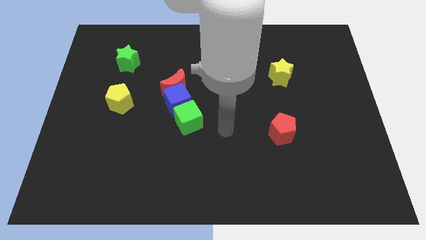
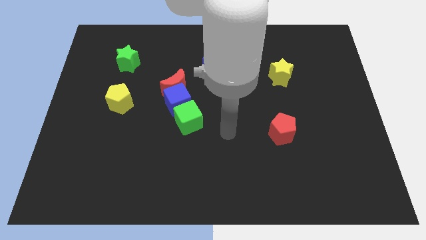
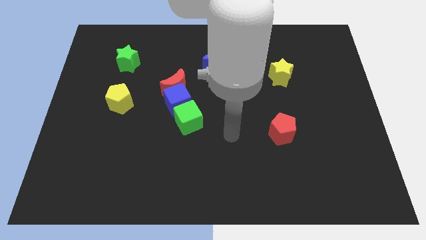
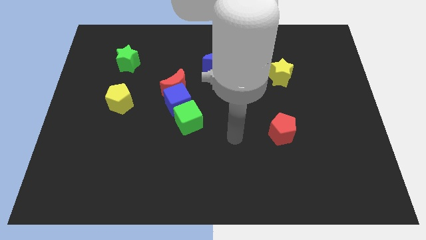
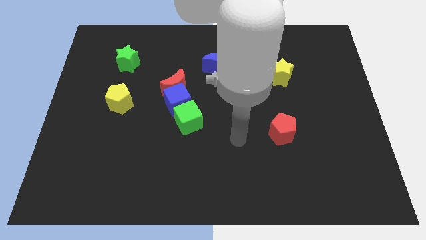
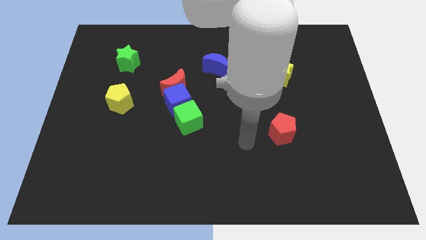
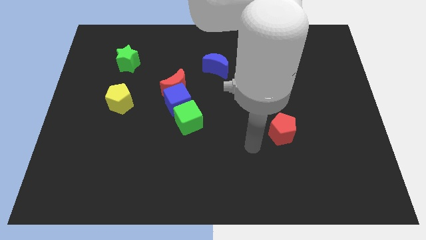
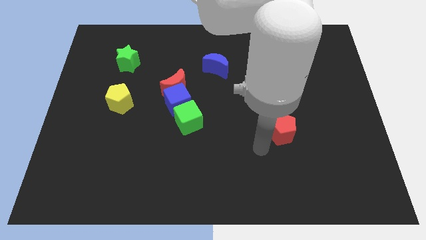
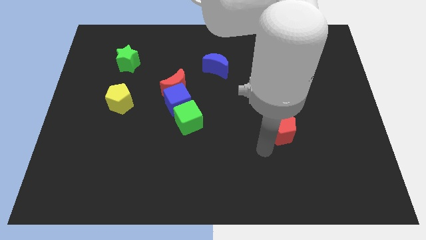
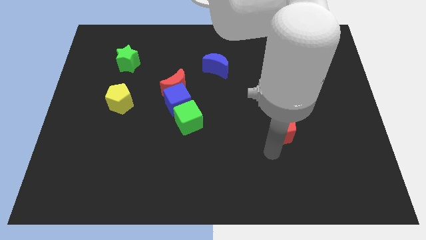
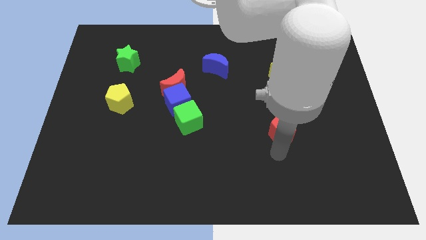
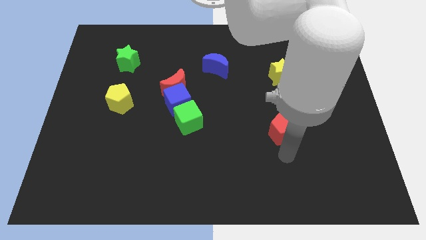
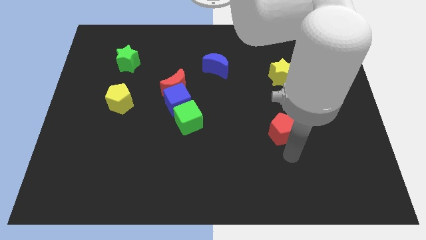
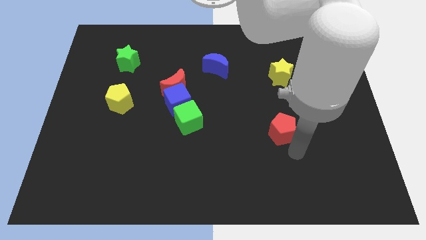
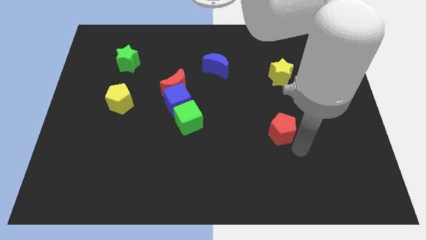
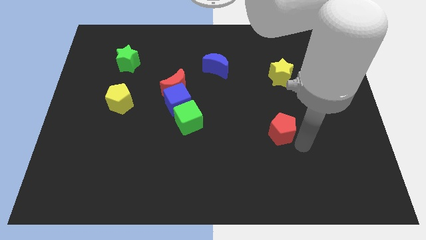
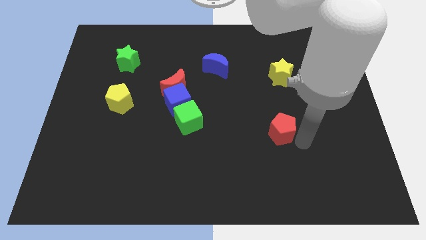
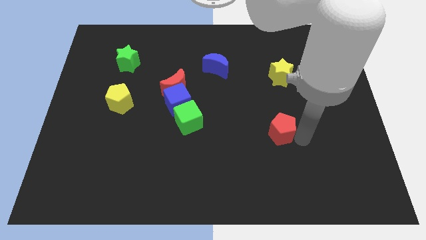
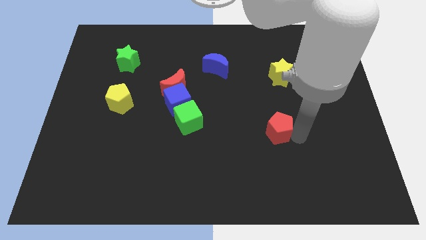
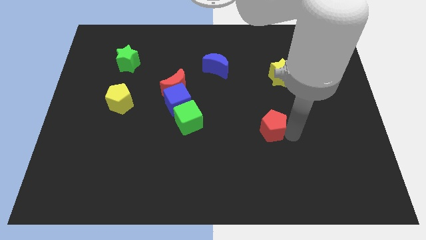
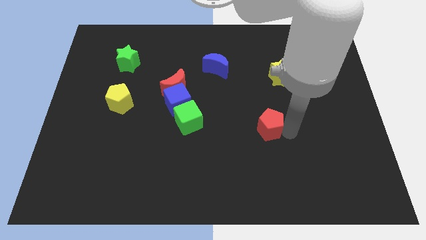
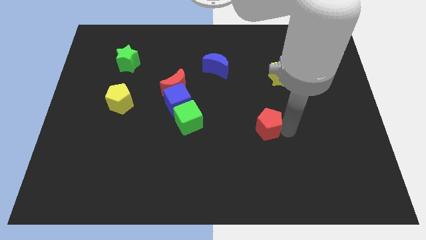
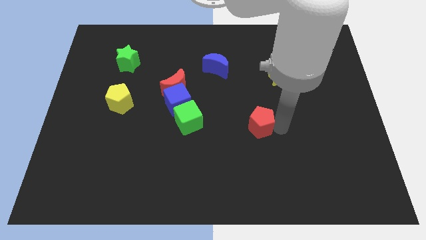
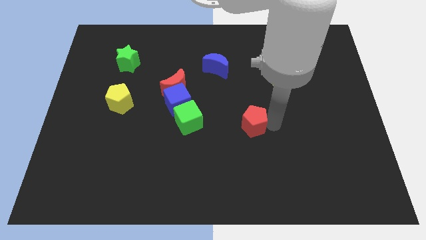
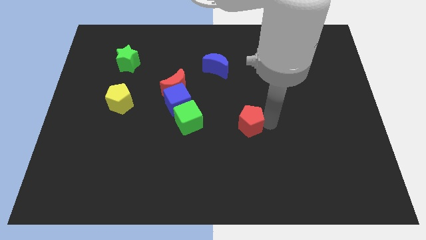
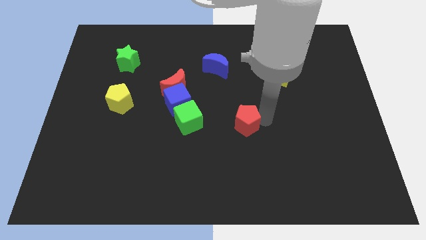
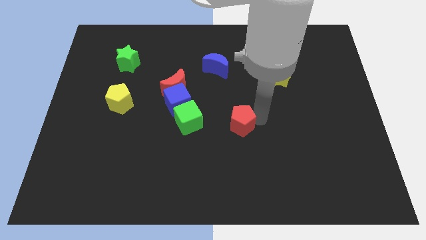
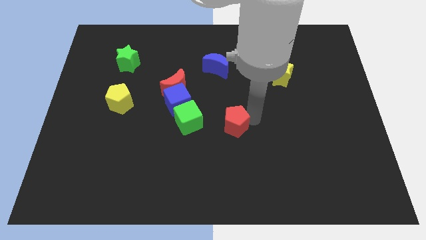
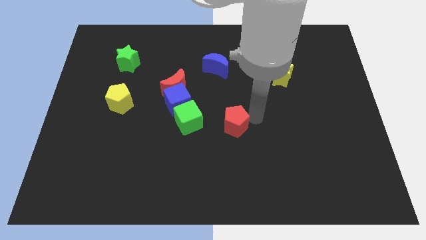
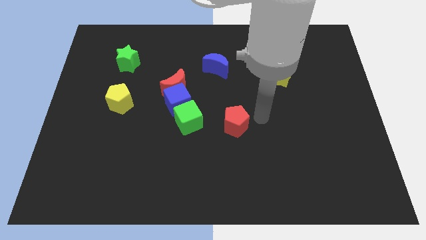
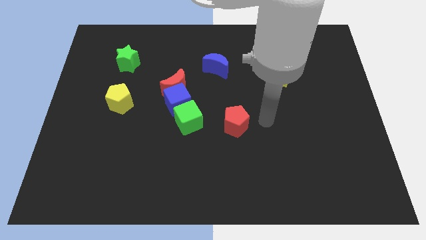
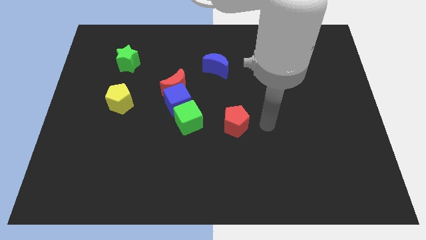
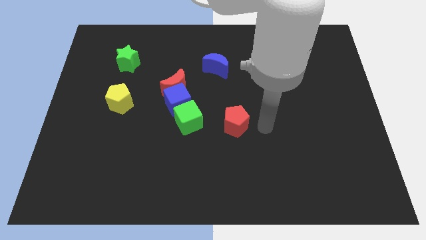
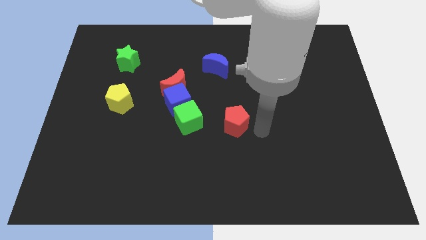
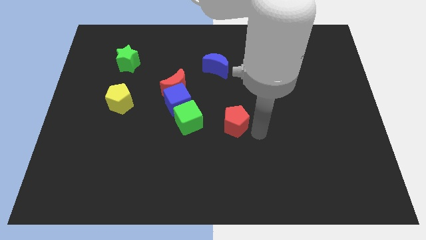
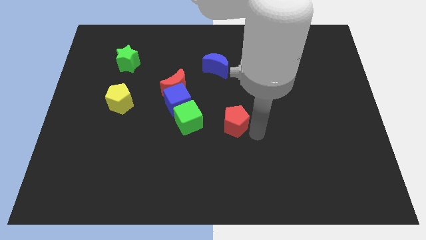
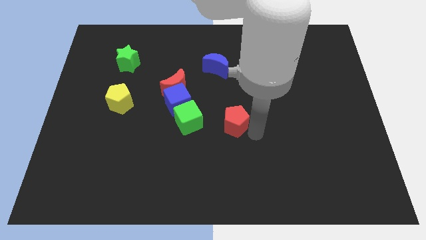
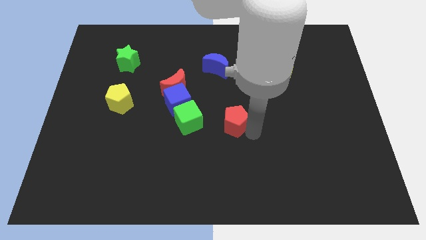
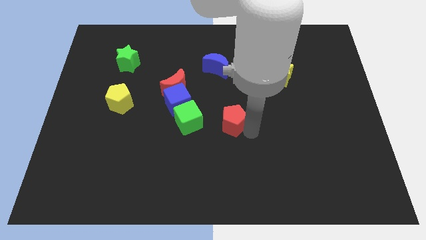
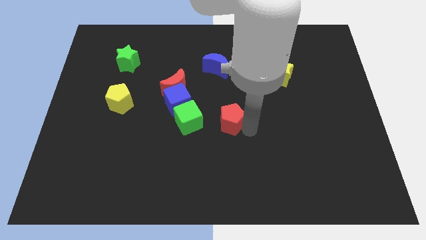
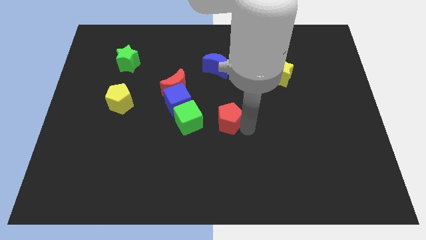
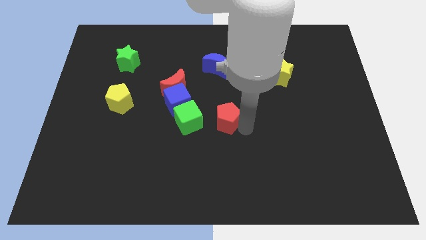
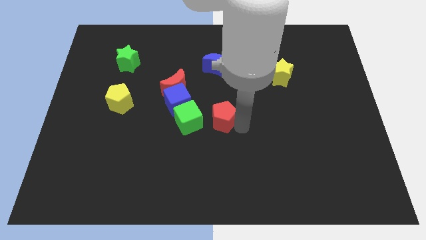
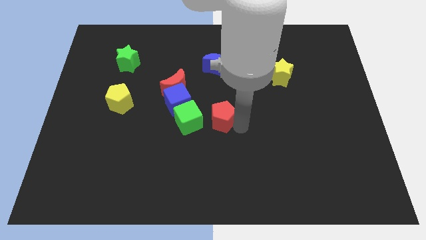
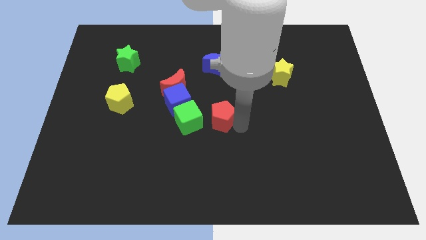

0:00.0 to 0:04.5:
move the red pentagon to the bottom of the blue crescent

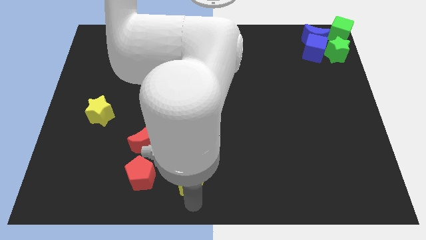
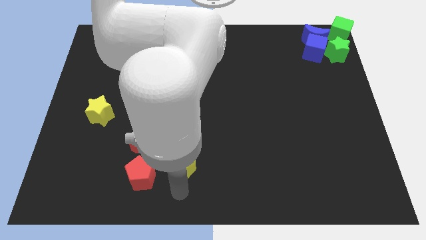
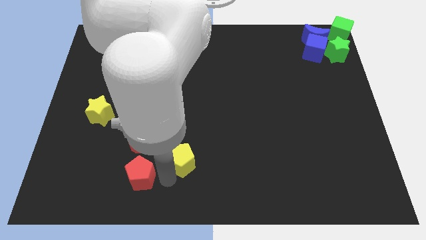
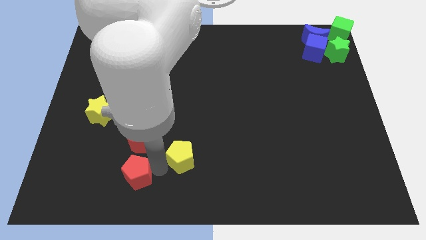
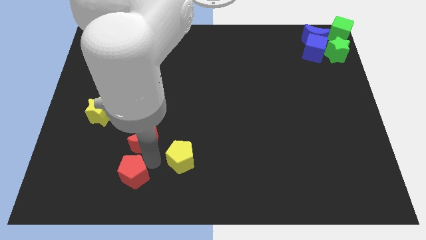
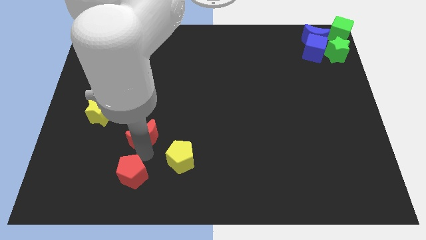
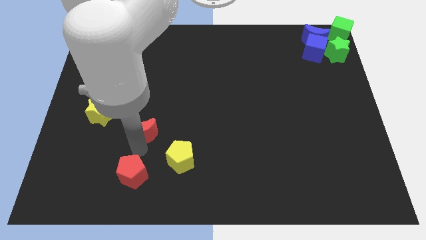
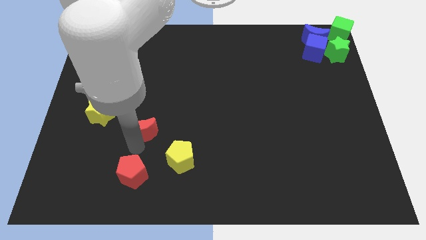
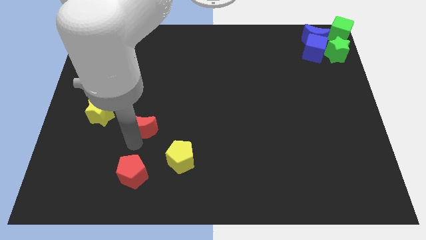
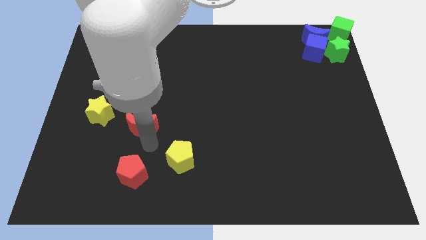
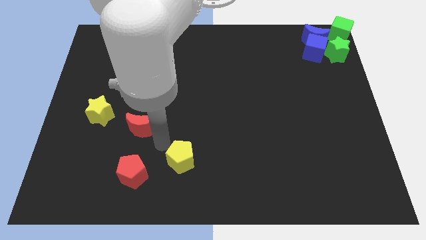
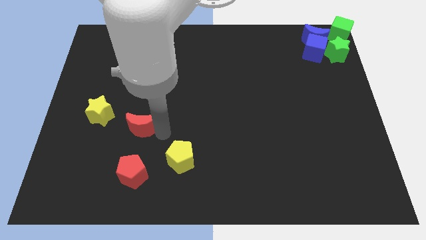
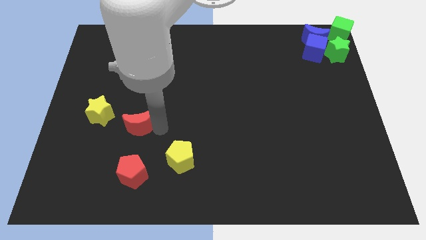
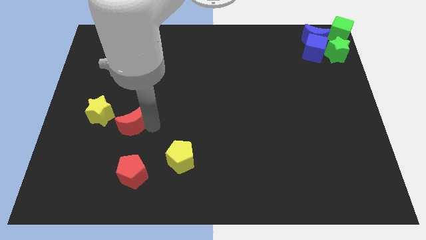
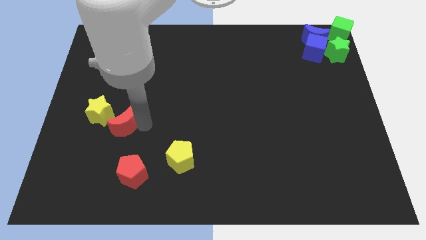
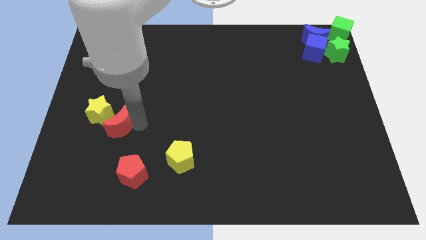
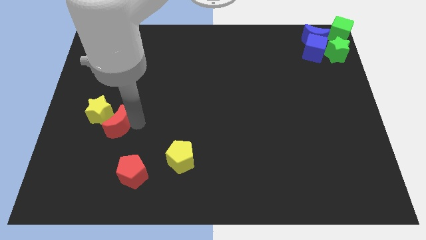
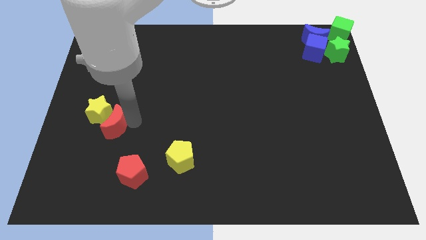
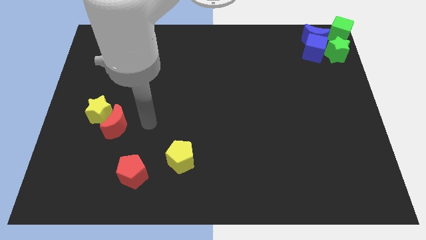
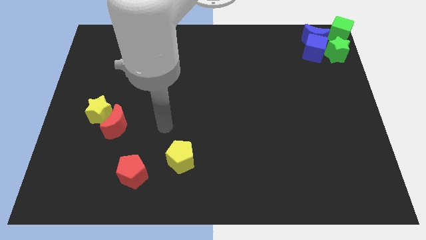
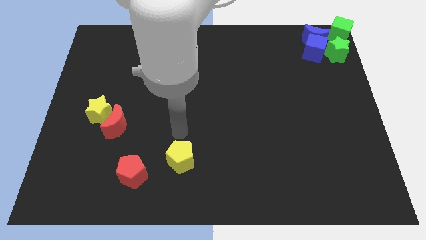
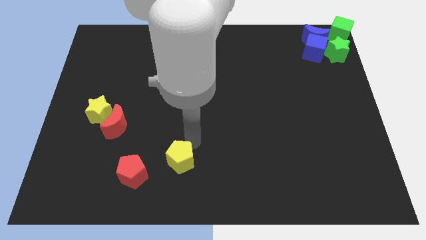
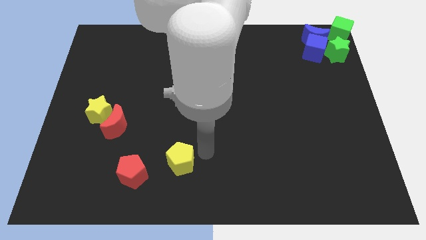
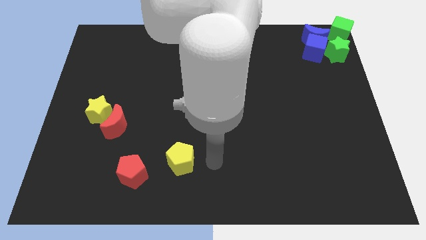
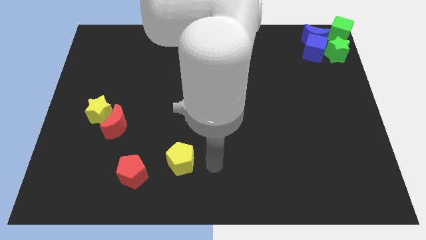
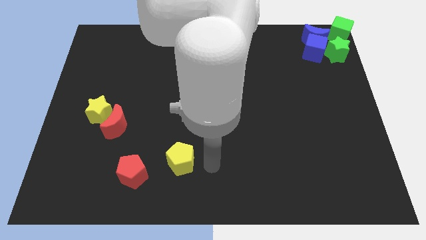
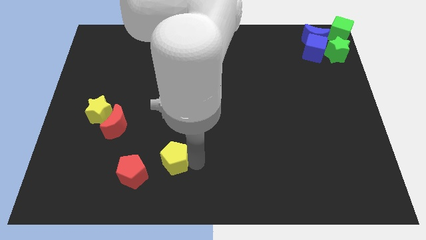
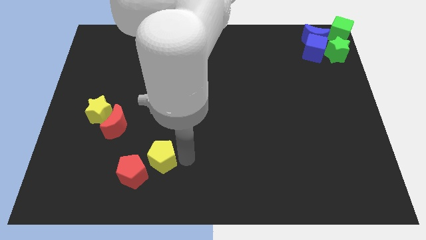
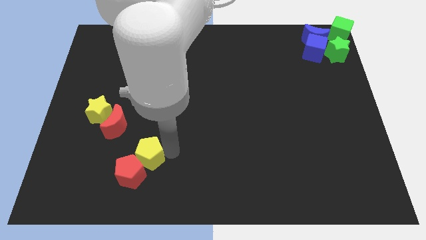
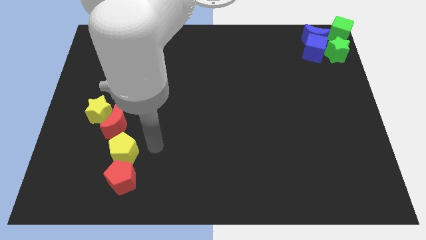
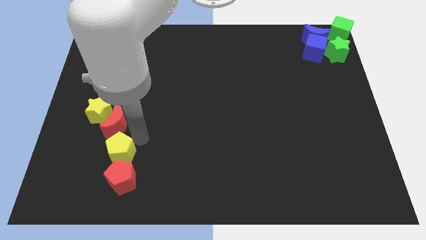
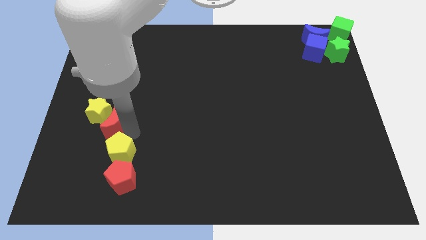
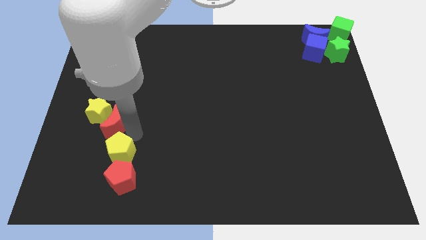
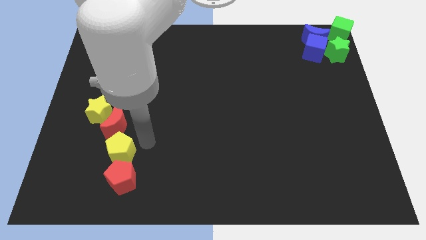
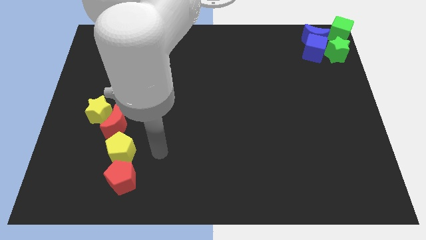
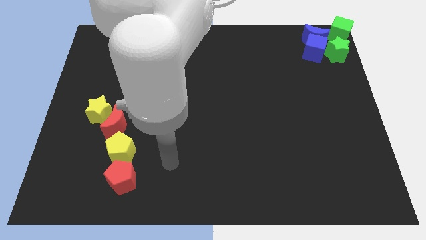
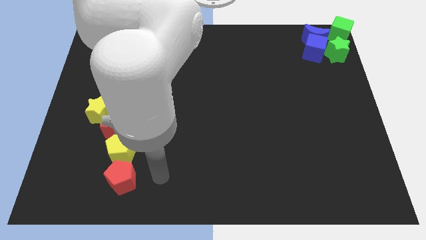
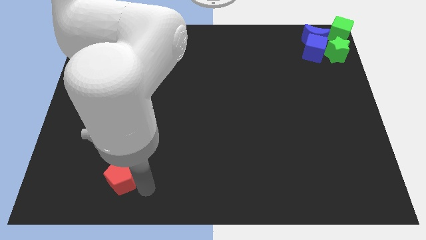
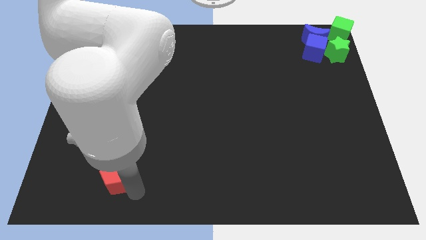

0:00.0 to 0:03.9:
push the yellow and red blocks to form a line

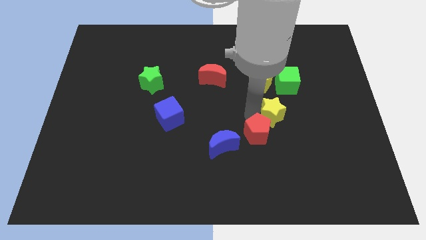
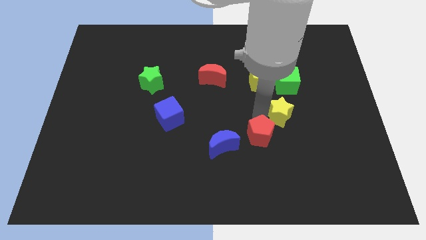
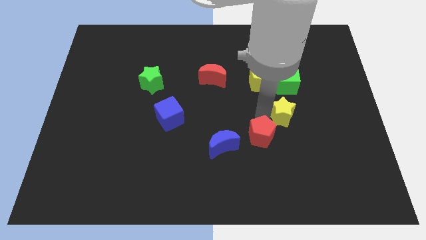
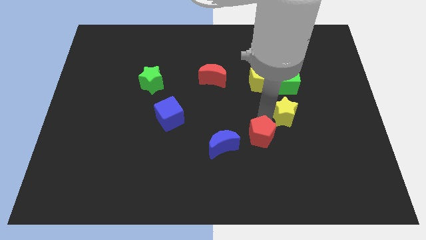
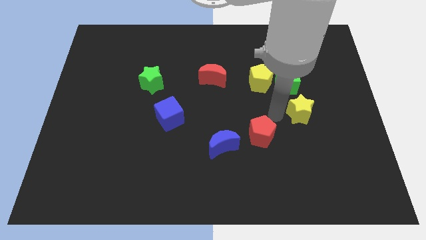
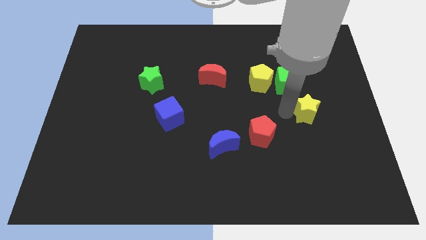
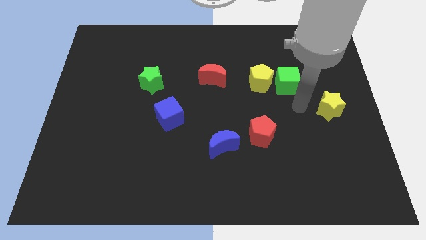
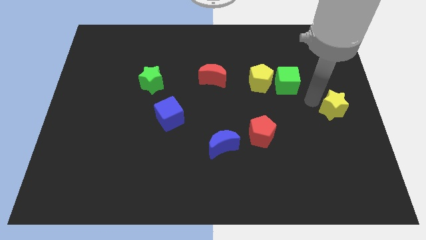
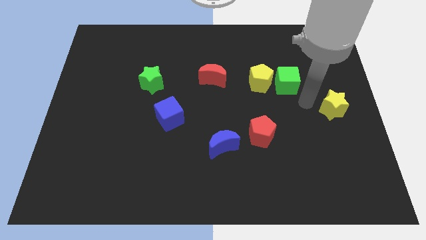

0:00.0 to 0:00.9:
move the yellow star to the center right
